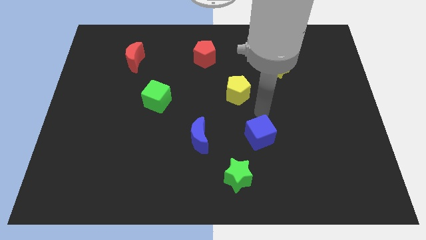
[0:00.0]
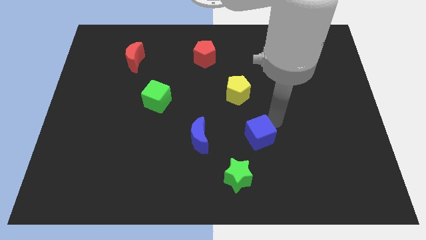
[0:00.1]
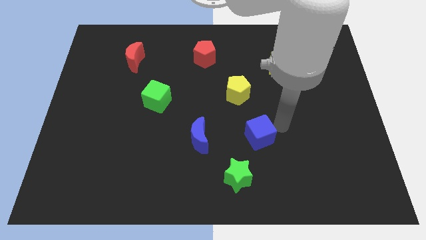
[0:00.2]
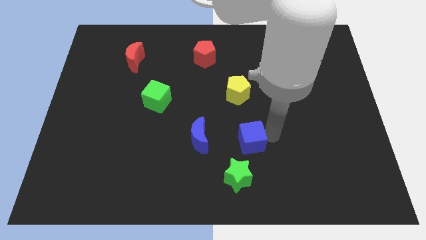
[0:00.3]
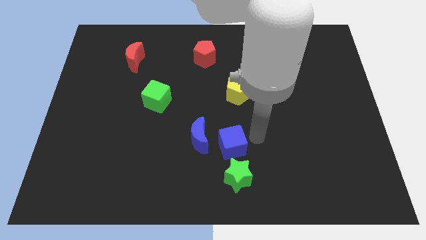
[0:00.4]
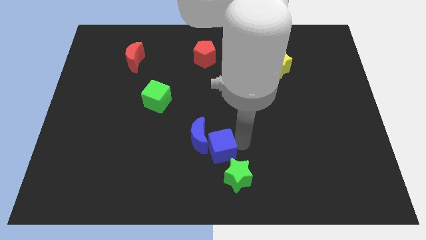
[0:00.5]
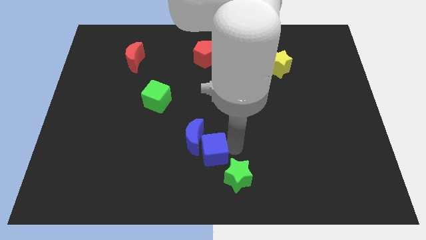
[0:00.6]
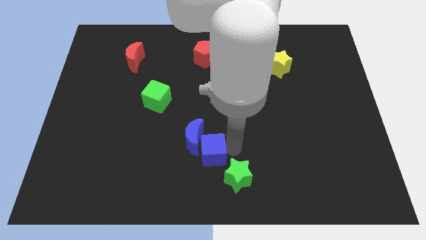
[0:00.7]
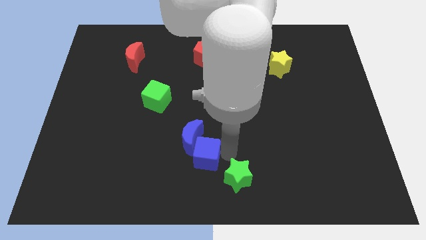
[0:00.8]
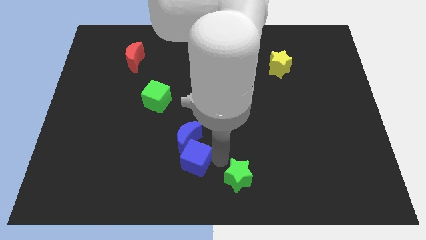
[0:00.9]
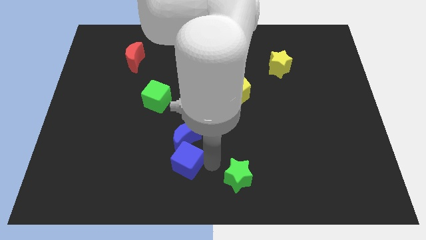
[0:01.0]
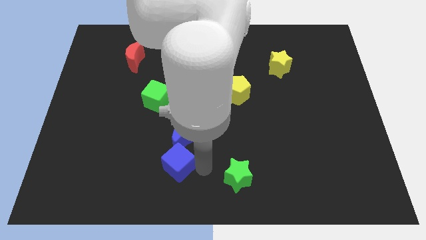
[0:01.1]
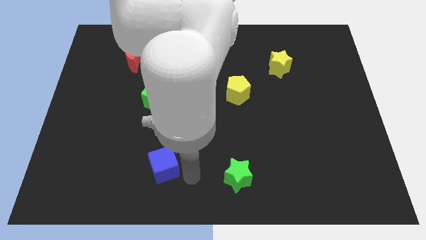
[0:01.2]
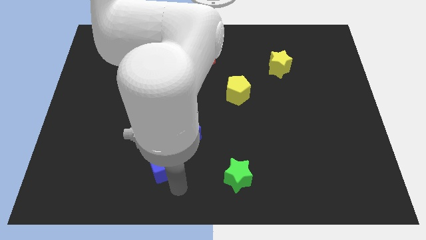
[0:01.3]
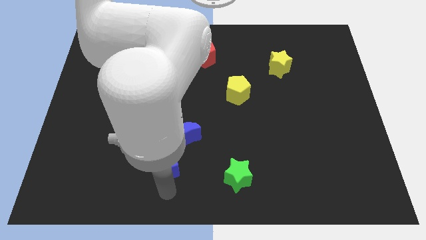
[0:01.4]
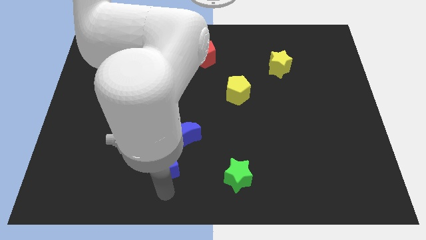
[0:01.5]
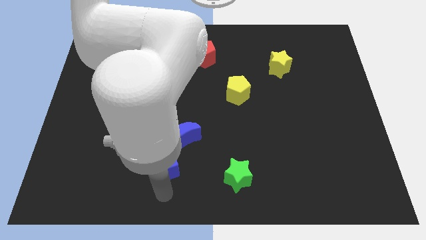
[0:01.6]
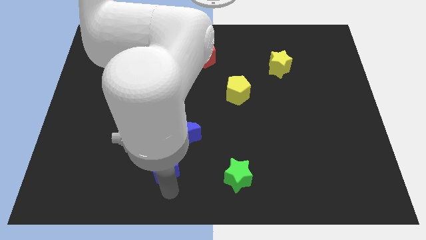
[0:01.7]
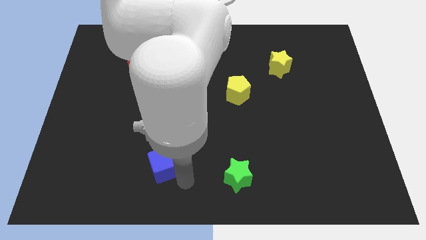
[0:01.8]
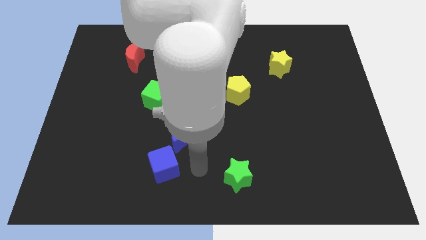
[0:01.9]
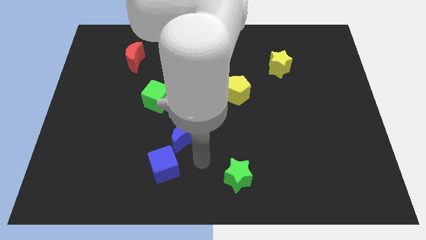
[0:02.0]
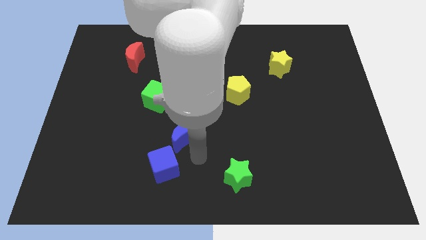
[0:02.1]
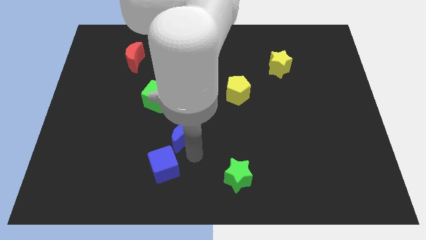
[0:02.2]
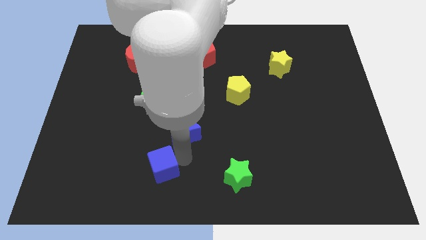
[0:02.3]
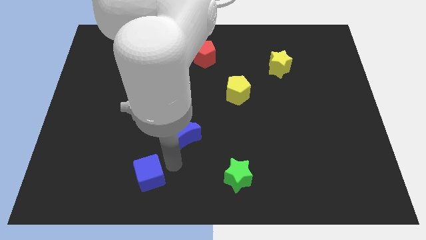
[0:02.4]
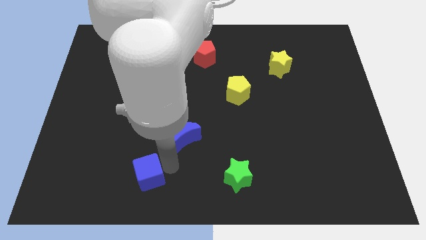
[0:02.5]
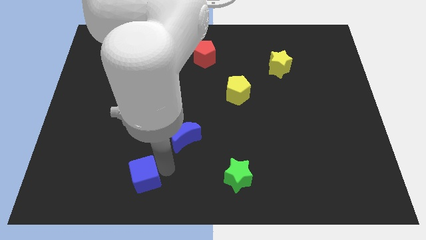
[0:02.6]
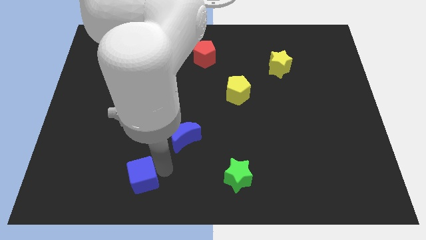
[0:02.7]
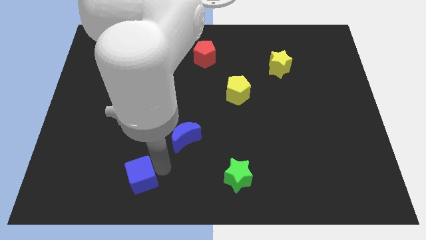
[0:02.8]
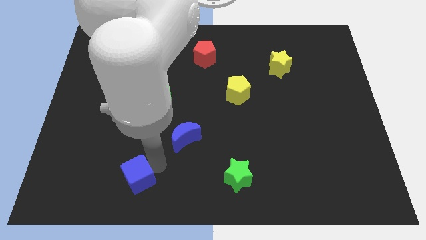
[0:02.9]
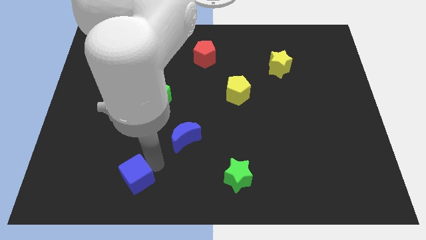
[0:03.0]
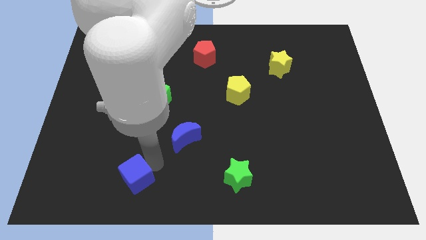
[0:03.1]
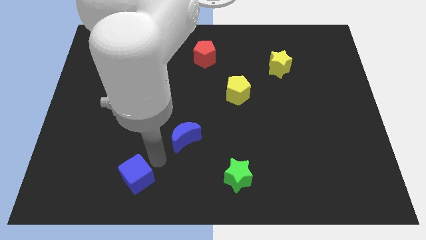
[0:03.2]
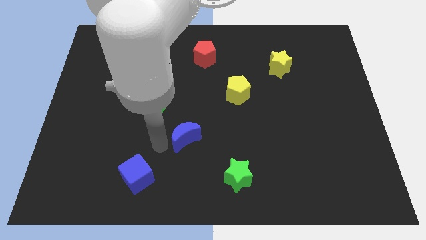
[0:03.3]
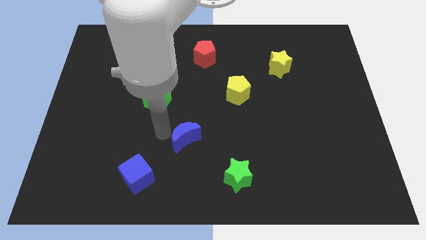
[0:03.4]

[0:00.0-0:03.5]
move the blue cube at the bottom left of the blue crescent

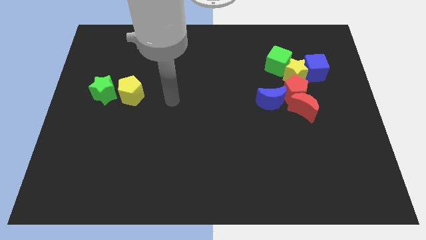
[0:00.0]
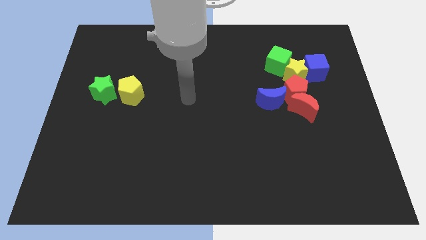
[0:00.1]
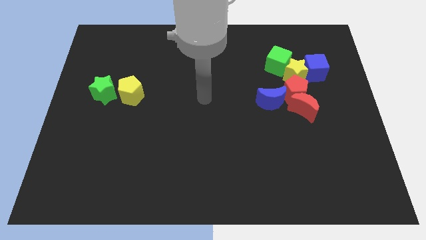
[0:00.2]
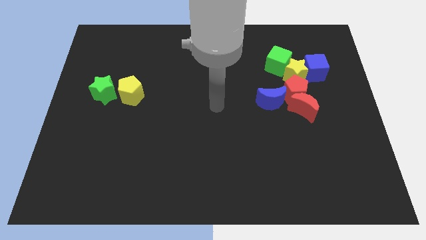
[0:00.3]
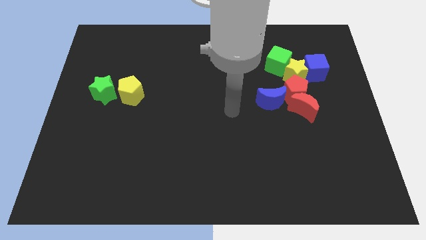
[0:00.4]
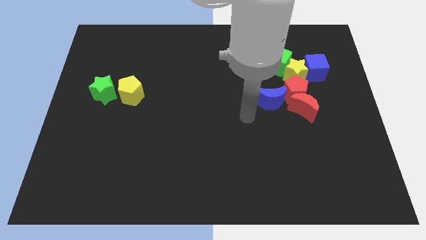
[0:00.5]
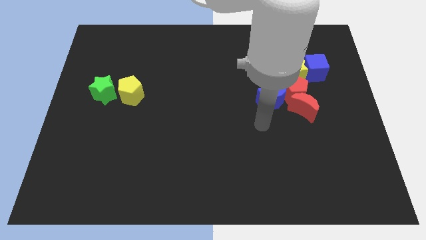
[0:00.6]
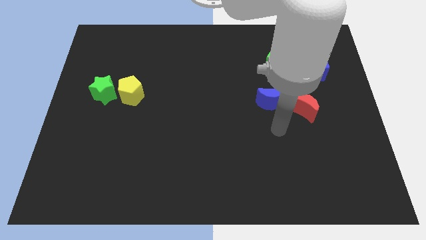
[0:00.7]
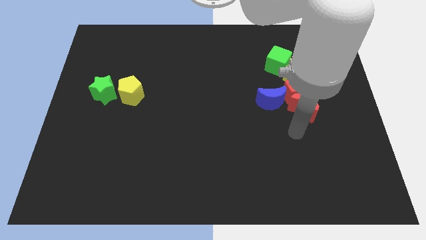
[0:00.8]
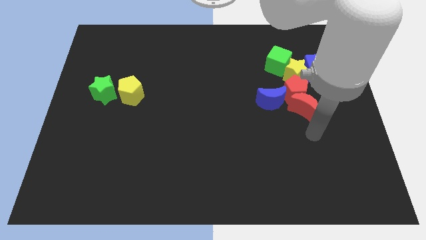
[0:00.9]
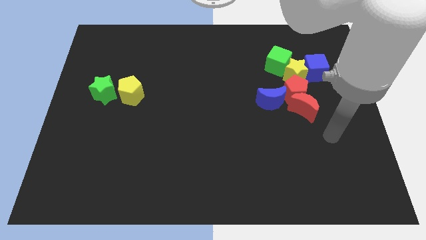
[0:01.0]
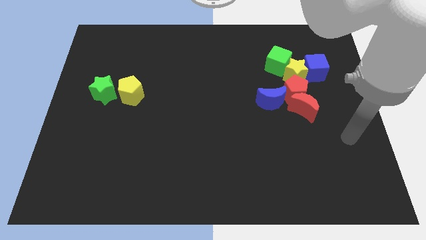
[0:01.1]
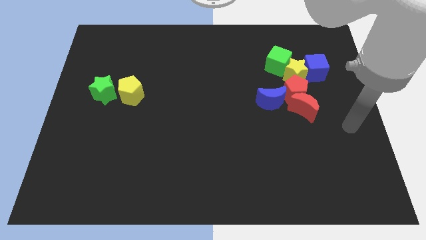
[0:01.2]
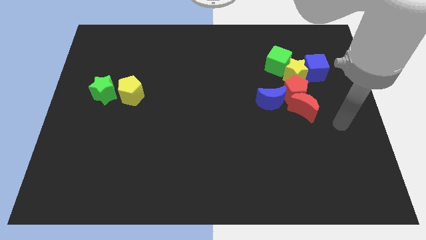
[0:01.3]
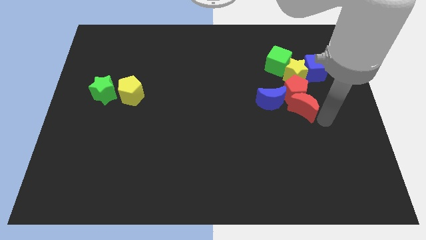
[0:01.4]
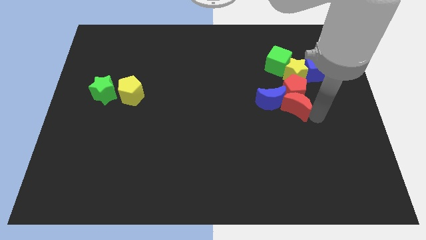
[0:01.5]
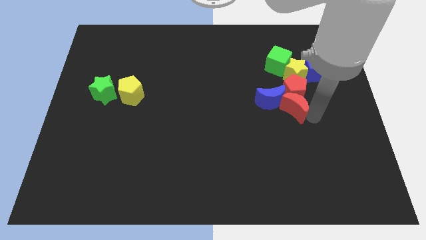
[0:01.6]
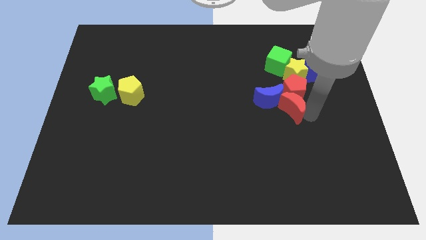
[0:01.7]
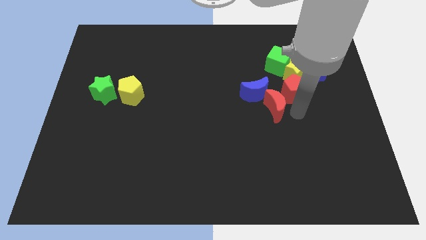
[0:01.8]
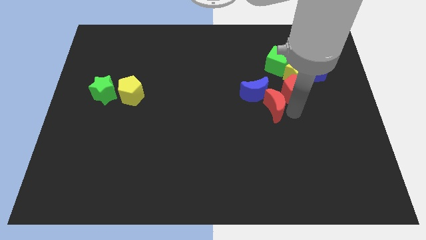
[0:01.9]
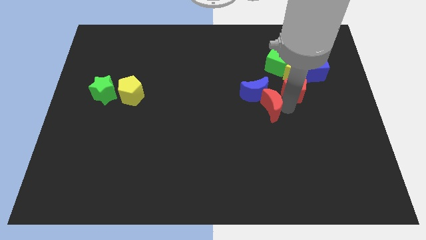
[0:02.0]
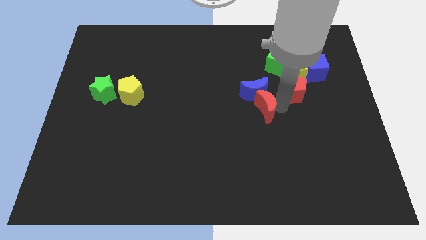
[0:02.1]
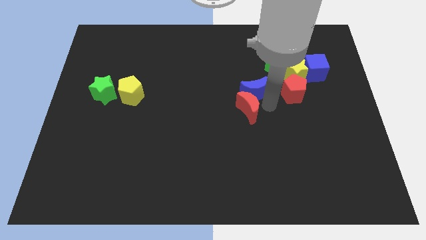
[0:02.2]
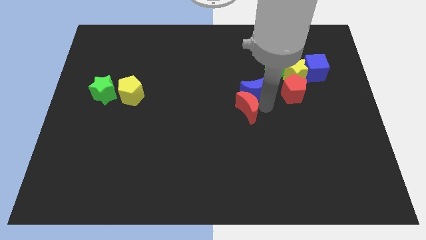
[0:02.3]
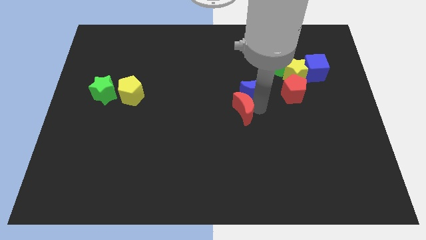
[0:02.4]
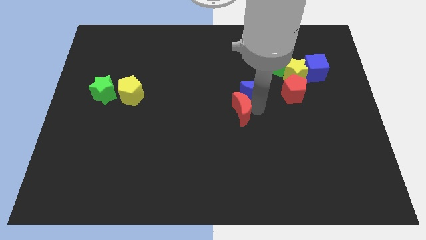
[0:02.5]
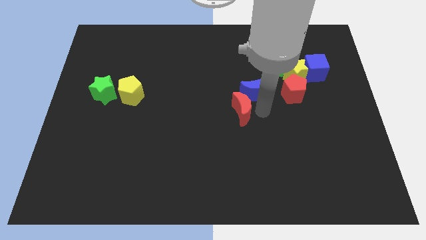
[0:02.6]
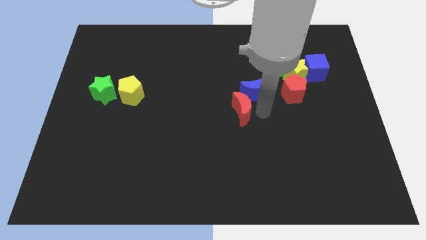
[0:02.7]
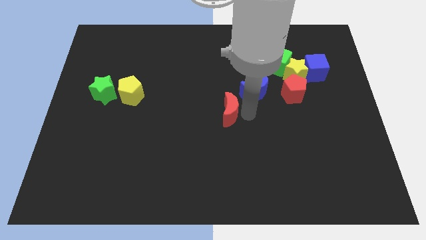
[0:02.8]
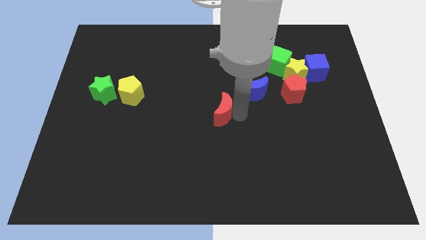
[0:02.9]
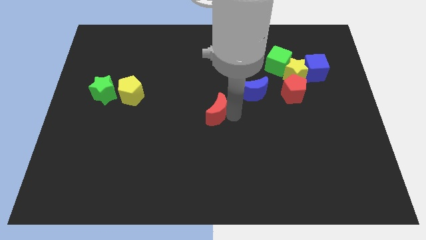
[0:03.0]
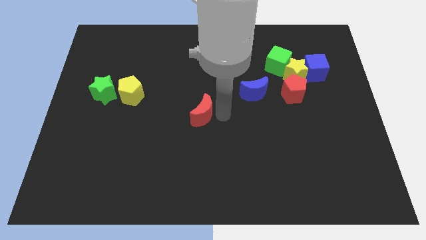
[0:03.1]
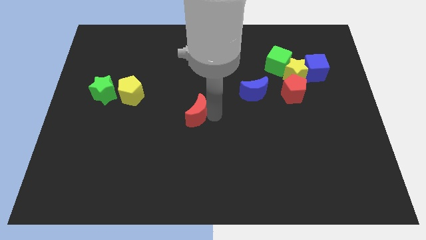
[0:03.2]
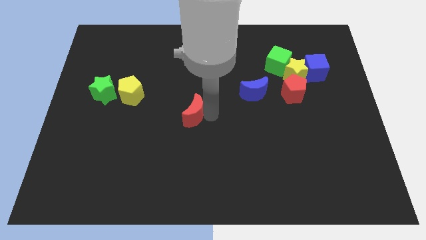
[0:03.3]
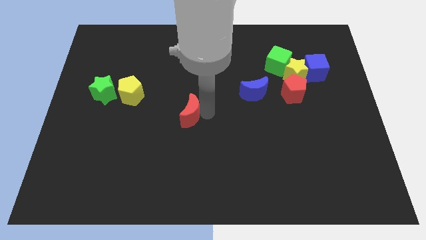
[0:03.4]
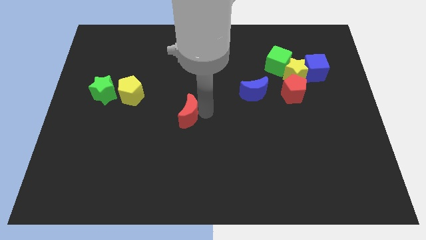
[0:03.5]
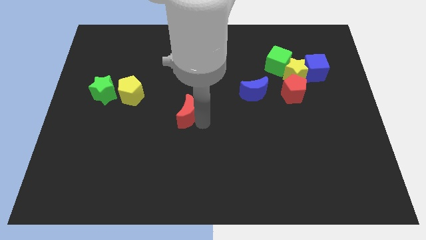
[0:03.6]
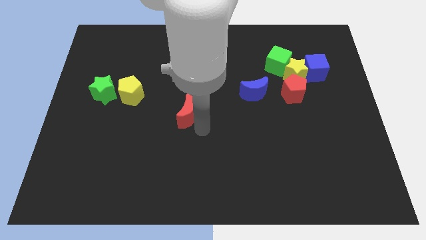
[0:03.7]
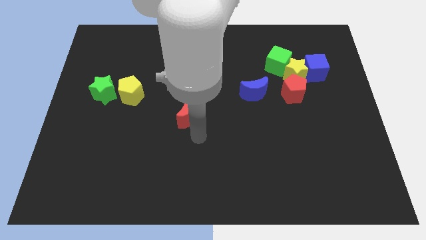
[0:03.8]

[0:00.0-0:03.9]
move the red moon towards the left

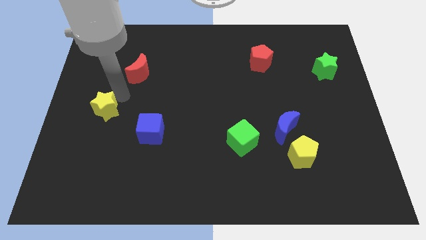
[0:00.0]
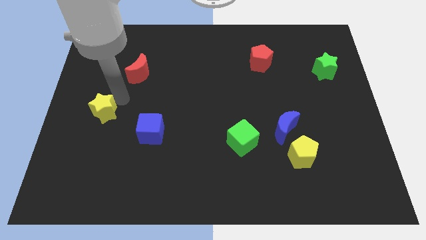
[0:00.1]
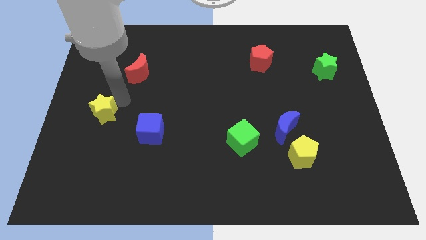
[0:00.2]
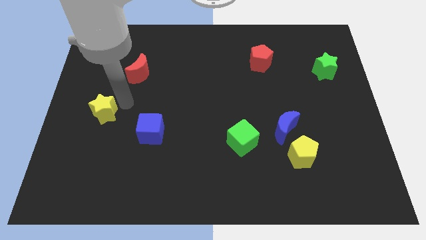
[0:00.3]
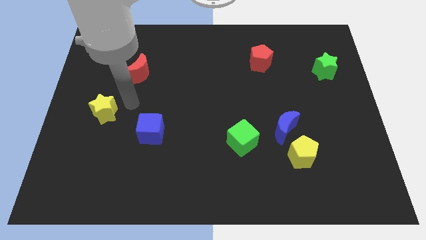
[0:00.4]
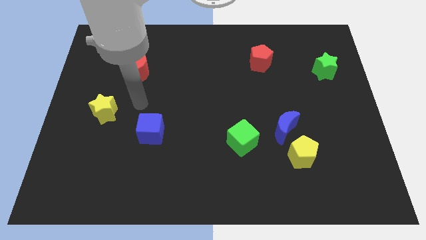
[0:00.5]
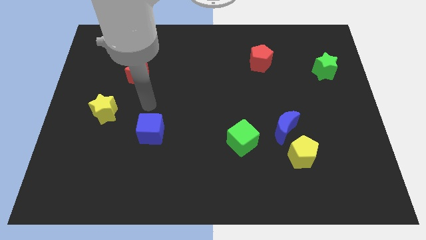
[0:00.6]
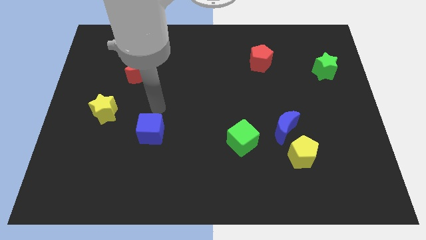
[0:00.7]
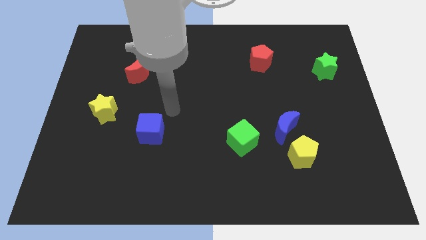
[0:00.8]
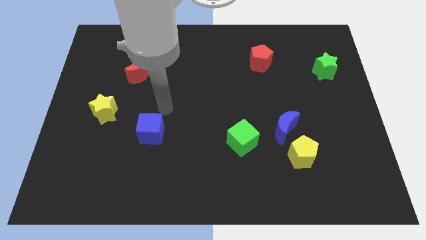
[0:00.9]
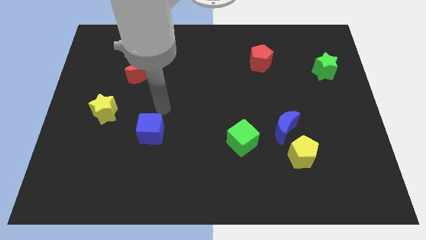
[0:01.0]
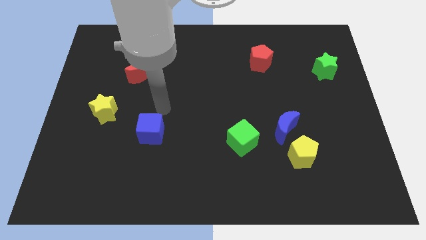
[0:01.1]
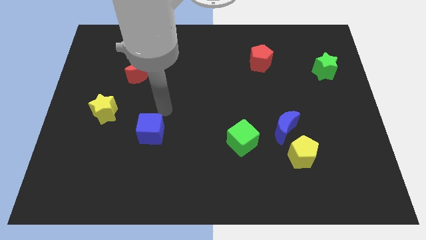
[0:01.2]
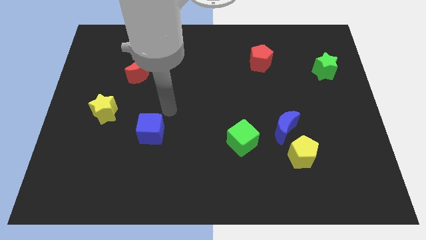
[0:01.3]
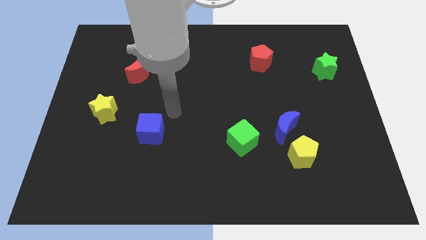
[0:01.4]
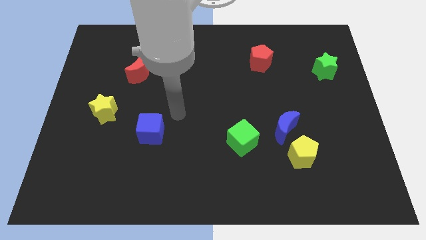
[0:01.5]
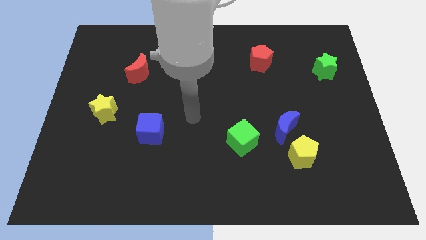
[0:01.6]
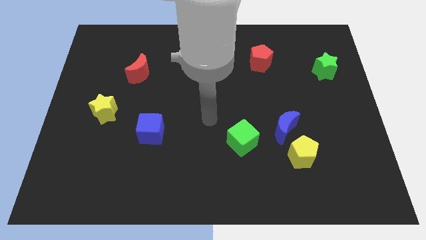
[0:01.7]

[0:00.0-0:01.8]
slightly move the yellow star towards left
